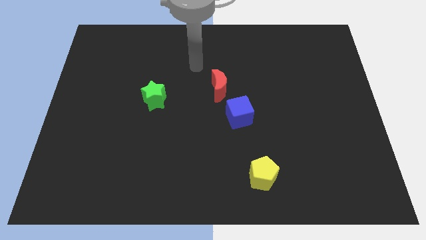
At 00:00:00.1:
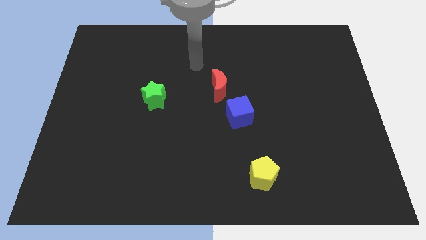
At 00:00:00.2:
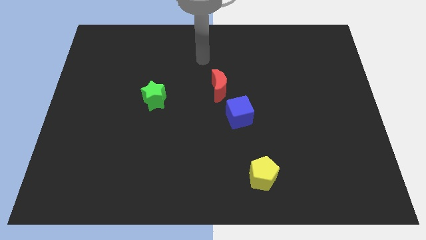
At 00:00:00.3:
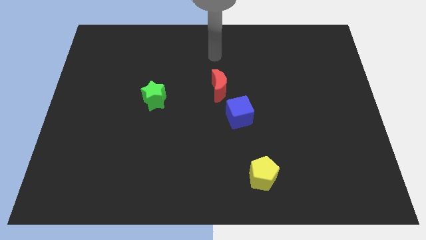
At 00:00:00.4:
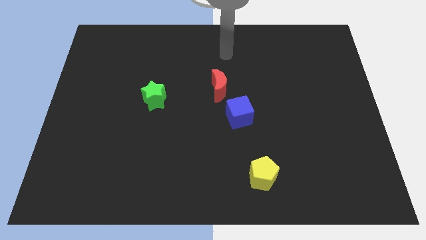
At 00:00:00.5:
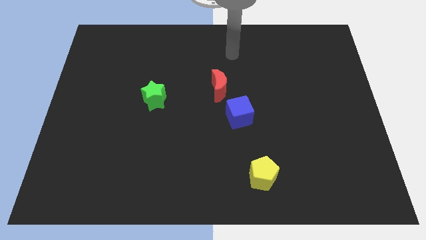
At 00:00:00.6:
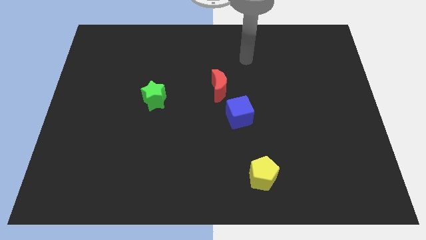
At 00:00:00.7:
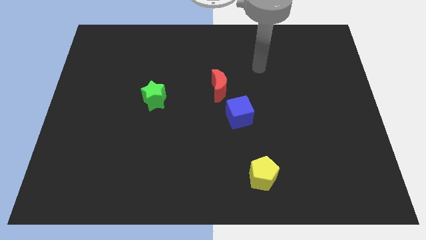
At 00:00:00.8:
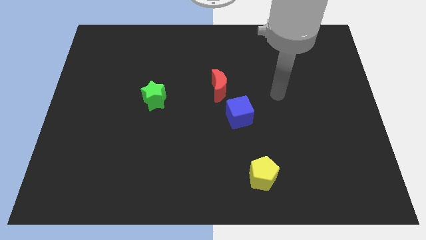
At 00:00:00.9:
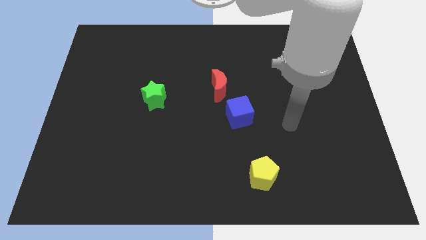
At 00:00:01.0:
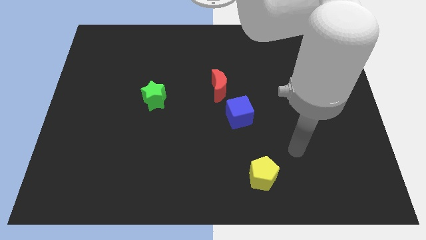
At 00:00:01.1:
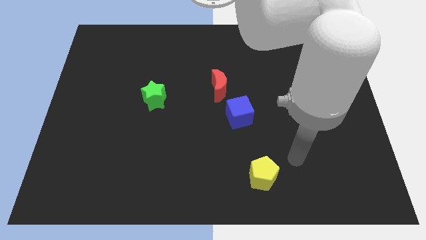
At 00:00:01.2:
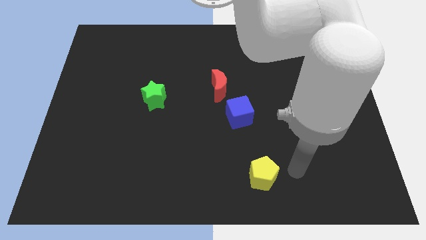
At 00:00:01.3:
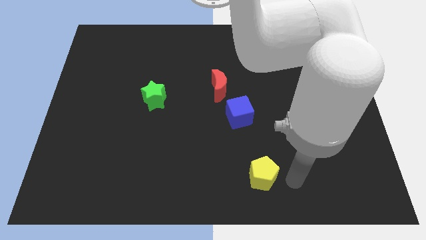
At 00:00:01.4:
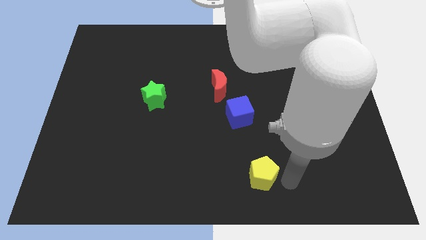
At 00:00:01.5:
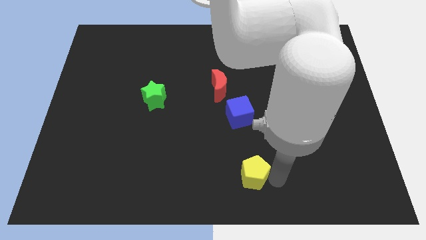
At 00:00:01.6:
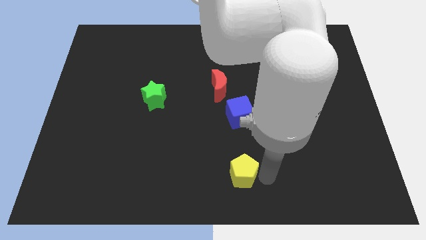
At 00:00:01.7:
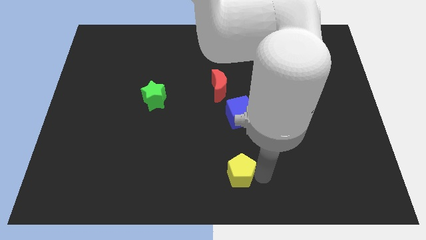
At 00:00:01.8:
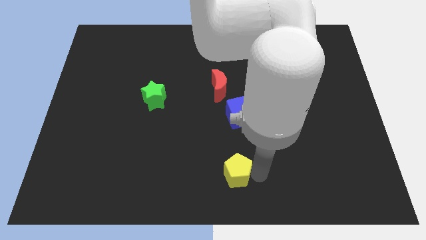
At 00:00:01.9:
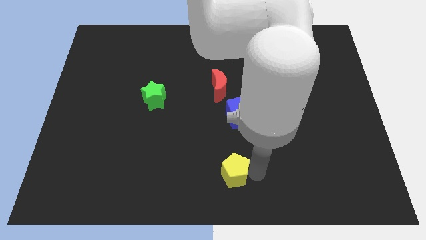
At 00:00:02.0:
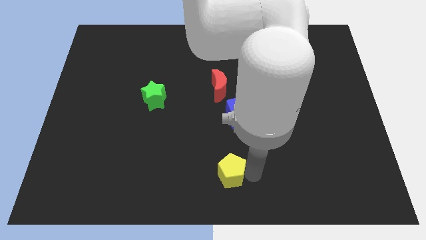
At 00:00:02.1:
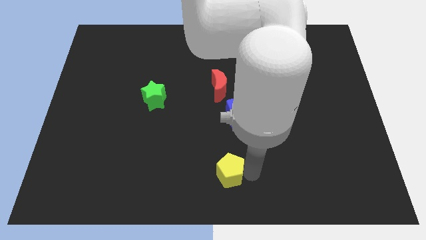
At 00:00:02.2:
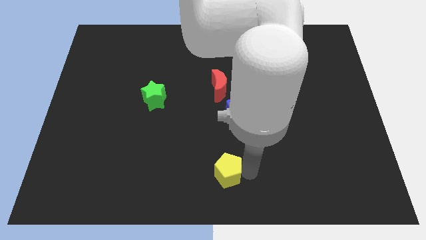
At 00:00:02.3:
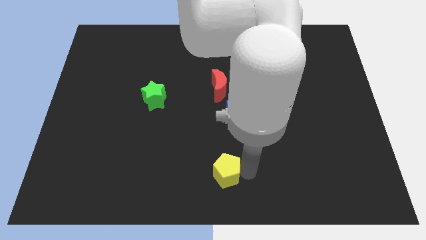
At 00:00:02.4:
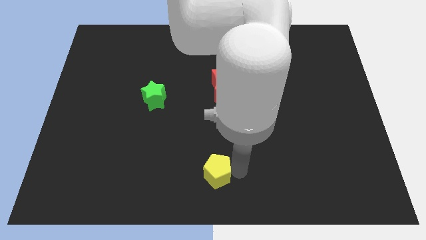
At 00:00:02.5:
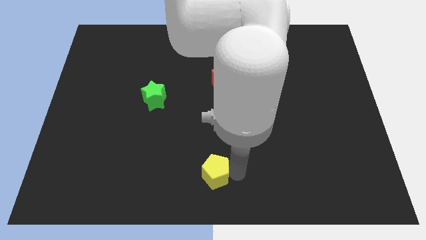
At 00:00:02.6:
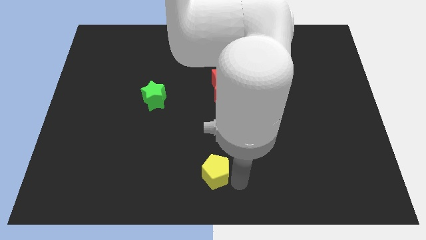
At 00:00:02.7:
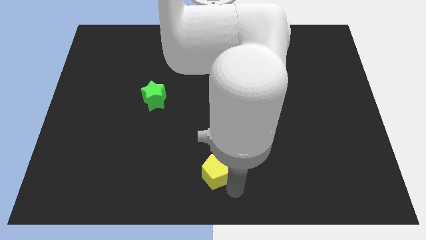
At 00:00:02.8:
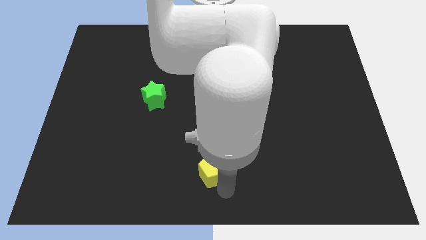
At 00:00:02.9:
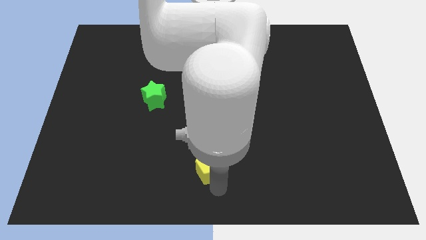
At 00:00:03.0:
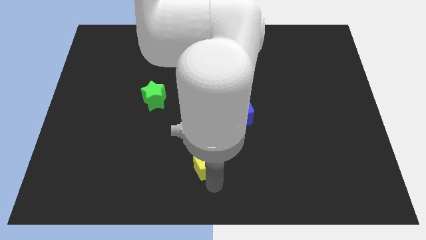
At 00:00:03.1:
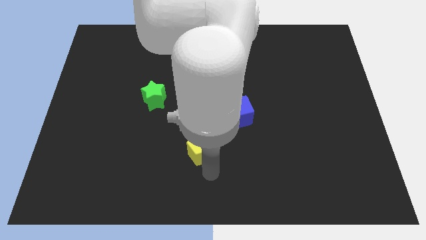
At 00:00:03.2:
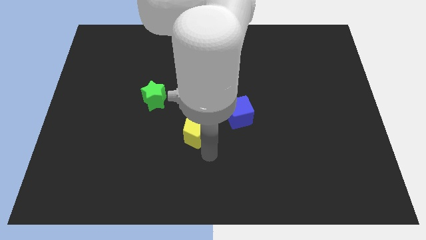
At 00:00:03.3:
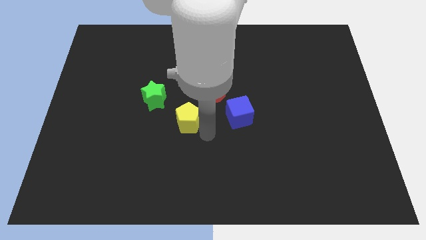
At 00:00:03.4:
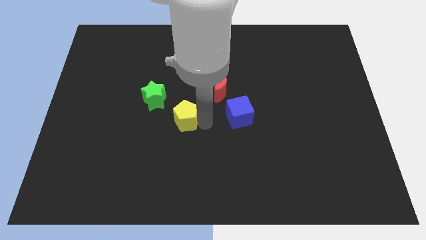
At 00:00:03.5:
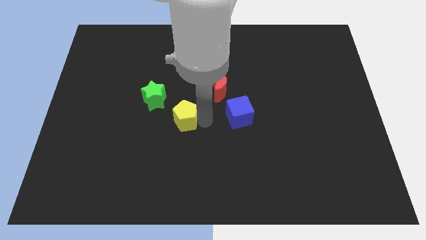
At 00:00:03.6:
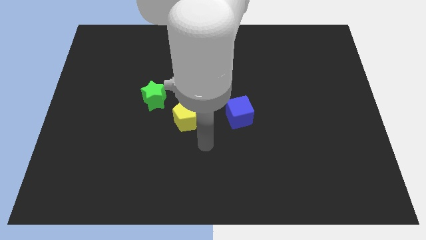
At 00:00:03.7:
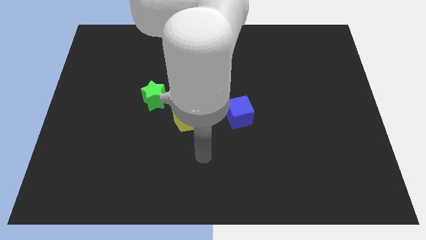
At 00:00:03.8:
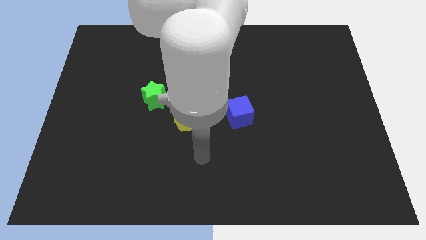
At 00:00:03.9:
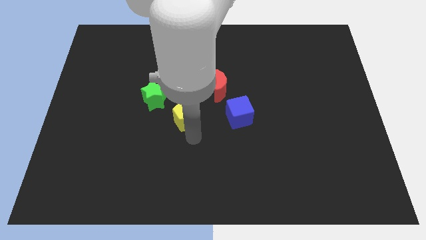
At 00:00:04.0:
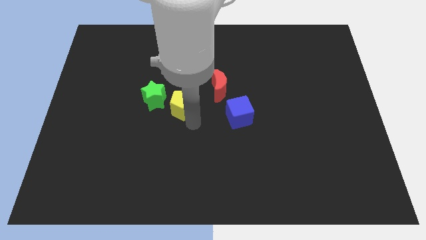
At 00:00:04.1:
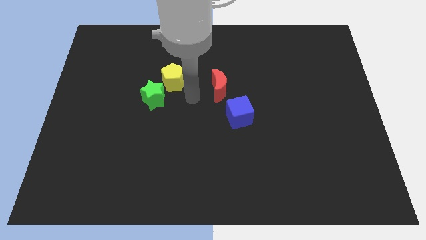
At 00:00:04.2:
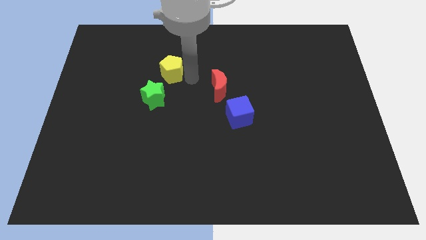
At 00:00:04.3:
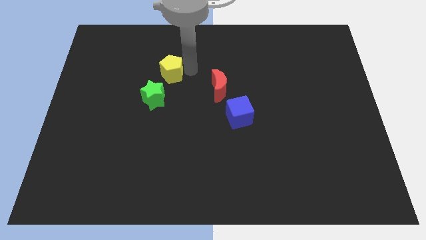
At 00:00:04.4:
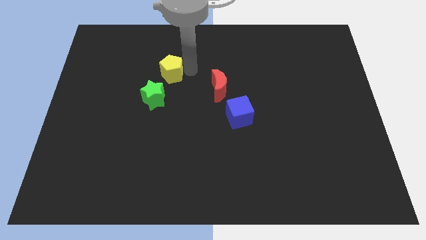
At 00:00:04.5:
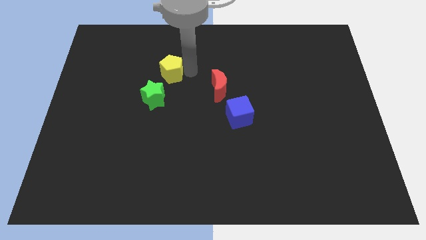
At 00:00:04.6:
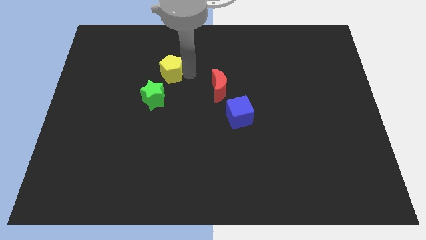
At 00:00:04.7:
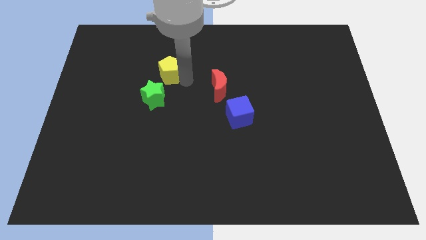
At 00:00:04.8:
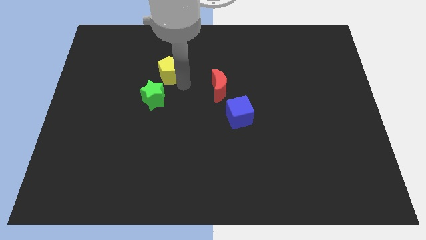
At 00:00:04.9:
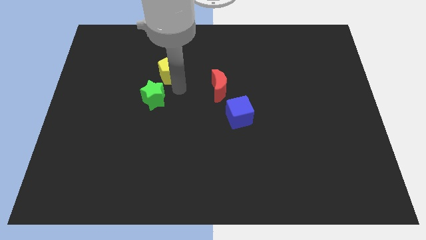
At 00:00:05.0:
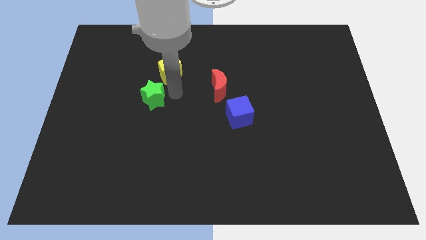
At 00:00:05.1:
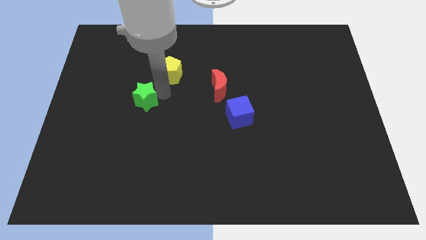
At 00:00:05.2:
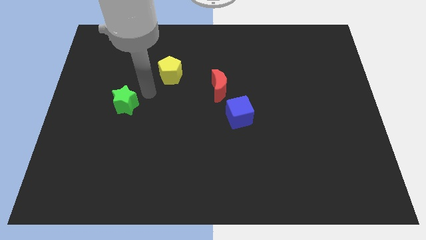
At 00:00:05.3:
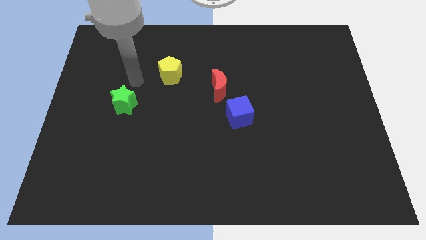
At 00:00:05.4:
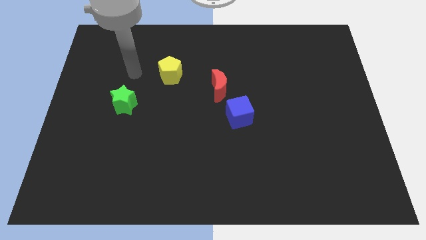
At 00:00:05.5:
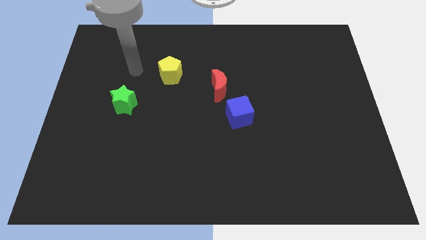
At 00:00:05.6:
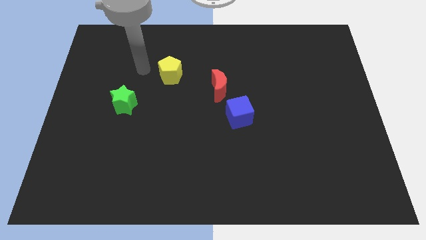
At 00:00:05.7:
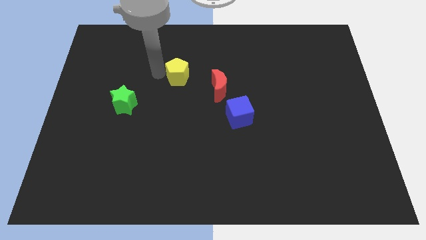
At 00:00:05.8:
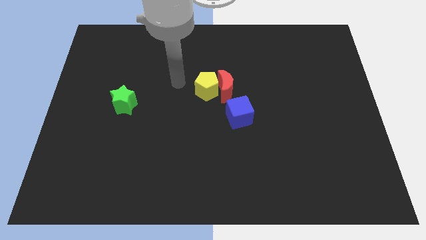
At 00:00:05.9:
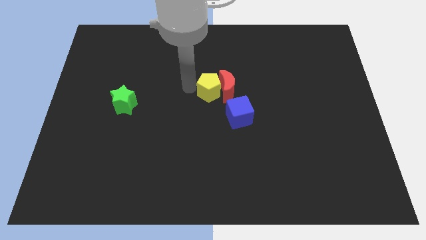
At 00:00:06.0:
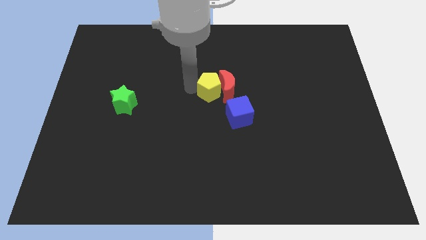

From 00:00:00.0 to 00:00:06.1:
put the pentagon to the moon

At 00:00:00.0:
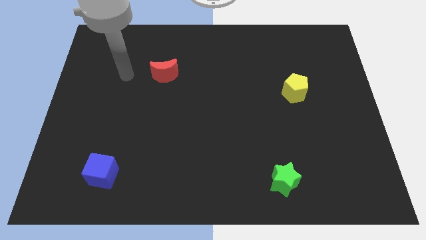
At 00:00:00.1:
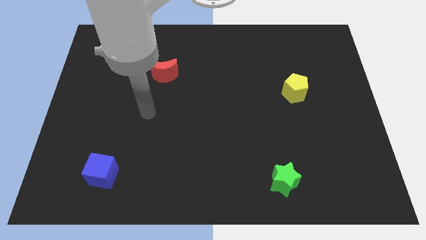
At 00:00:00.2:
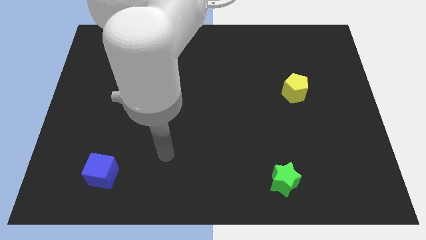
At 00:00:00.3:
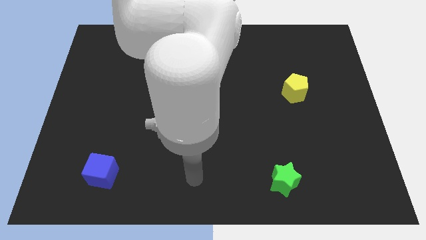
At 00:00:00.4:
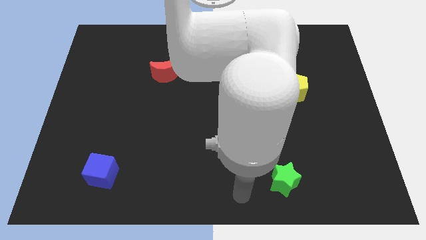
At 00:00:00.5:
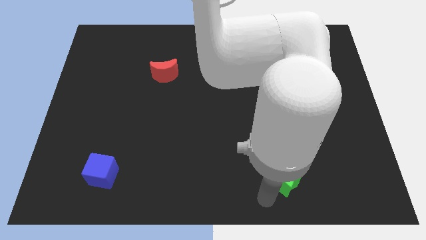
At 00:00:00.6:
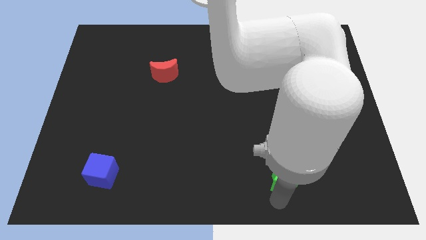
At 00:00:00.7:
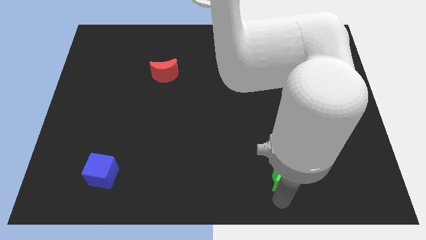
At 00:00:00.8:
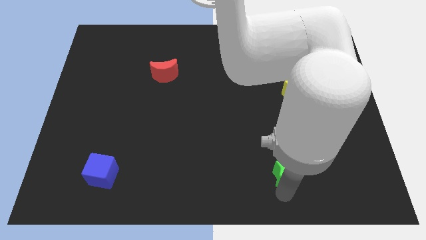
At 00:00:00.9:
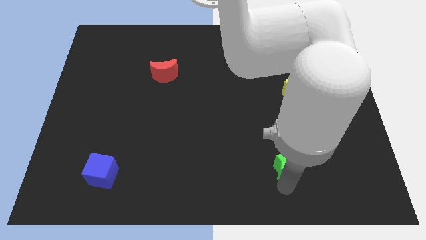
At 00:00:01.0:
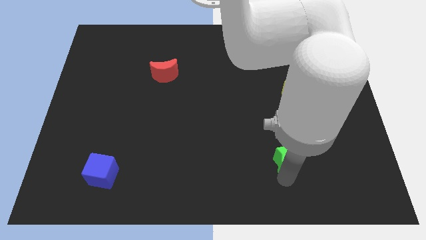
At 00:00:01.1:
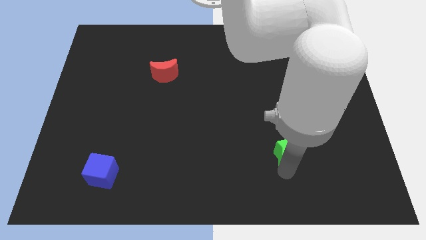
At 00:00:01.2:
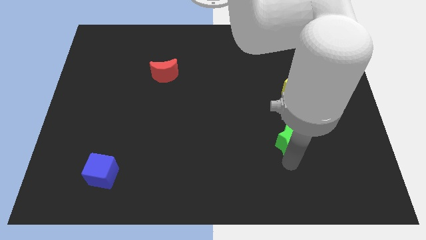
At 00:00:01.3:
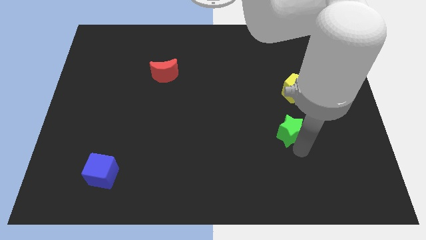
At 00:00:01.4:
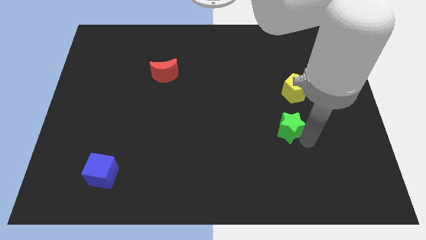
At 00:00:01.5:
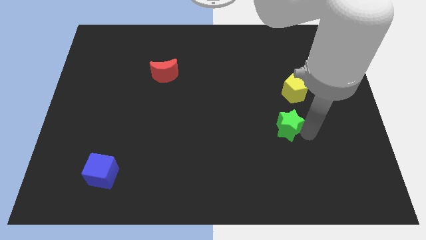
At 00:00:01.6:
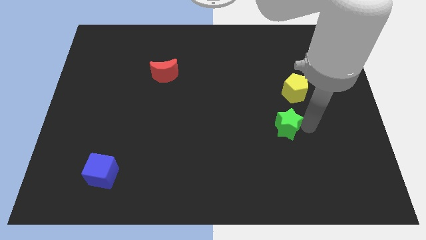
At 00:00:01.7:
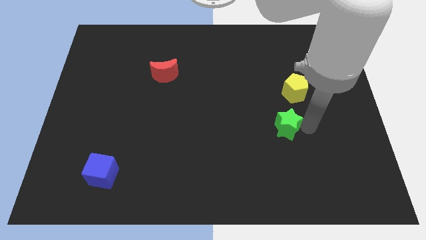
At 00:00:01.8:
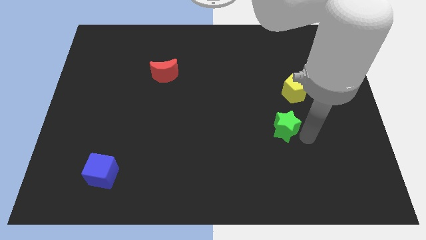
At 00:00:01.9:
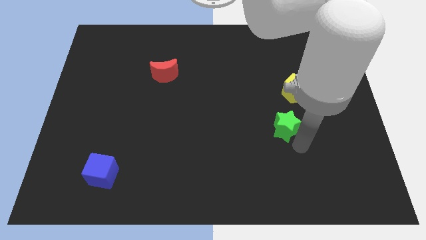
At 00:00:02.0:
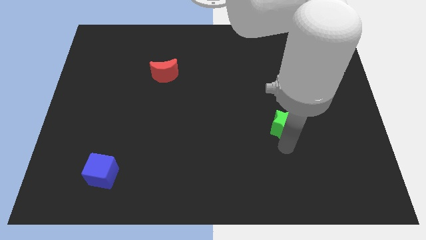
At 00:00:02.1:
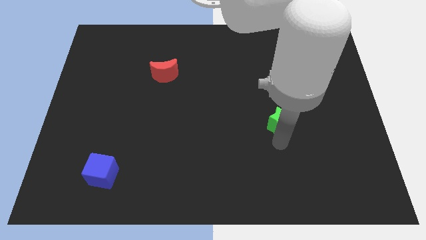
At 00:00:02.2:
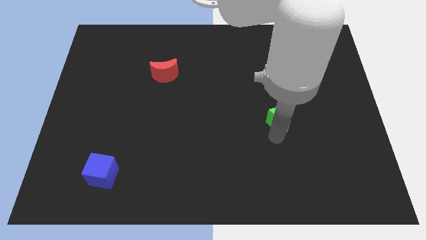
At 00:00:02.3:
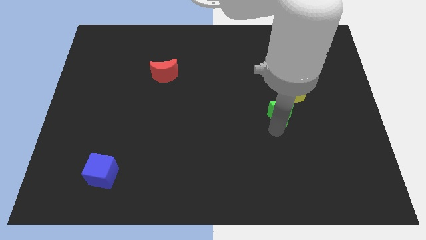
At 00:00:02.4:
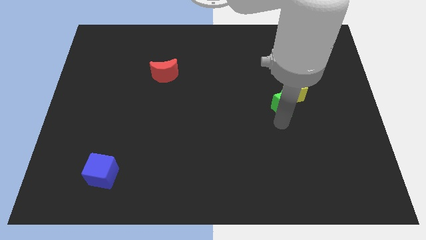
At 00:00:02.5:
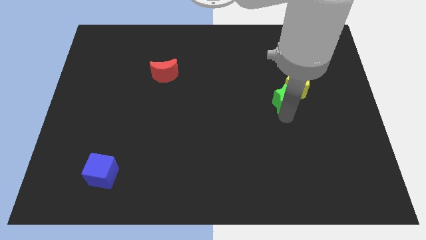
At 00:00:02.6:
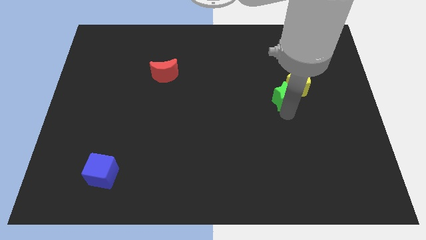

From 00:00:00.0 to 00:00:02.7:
put the green block towards the pentagon
